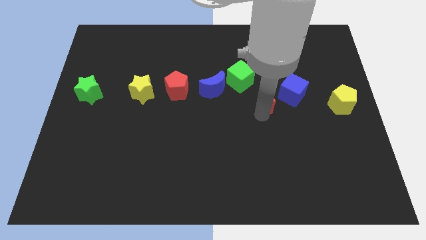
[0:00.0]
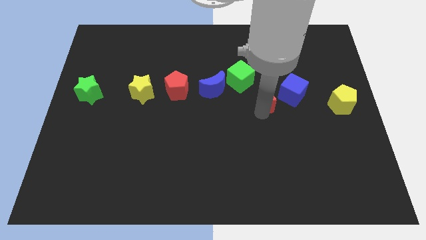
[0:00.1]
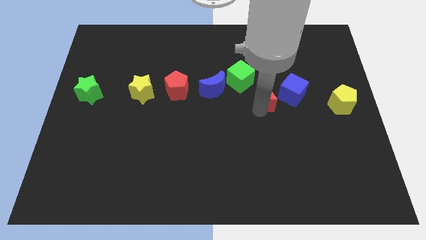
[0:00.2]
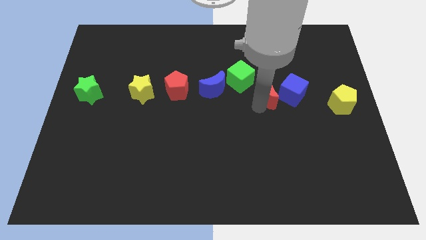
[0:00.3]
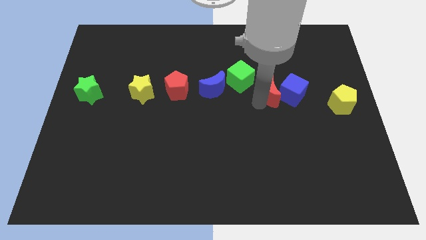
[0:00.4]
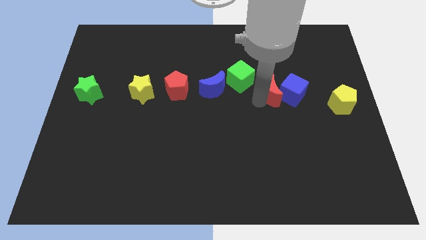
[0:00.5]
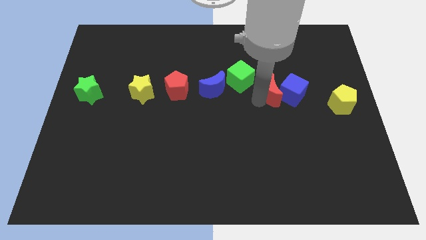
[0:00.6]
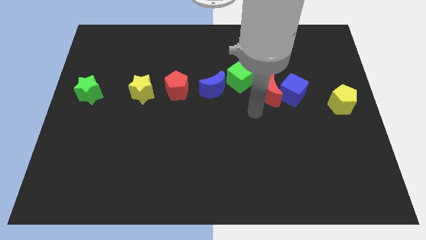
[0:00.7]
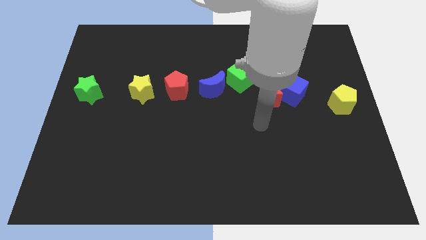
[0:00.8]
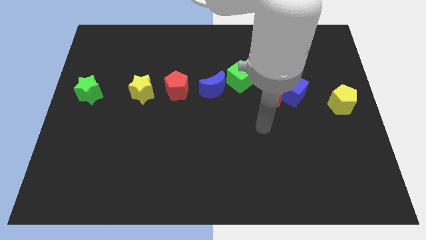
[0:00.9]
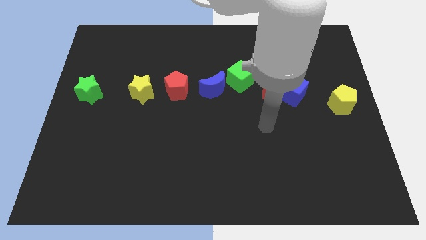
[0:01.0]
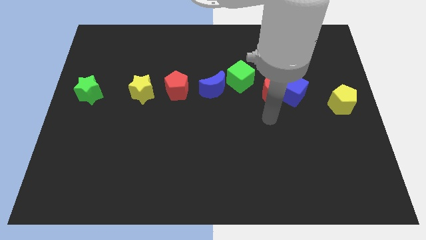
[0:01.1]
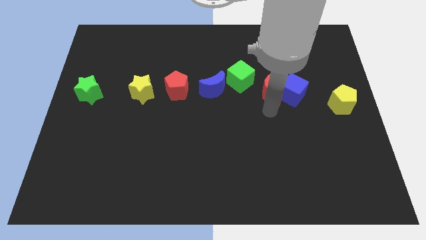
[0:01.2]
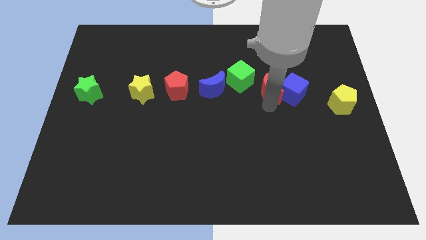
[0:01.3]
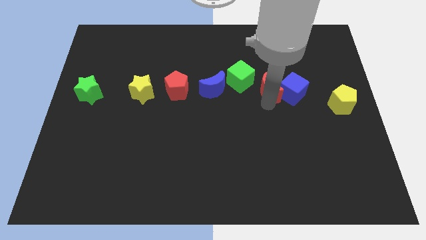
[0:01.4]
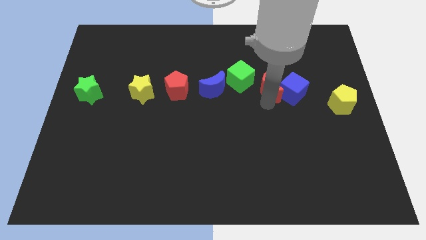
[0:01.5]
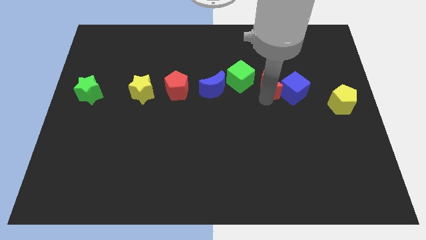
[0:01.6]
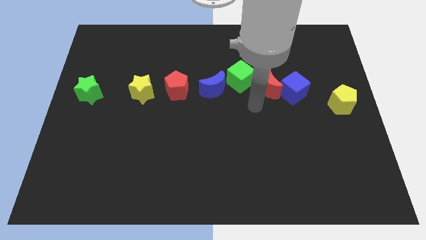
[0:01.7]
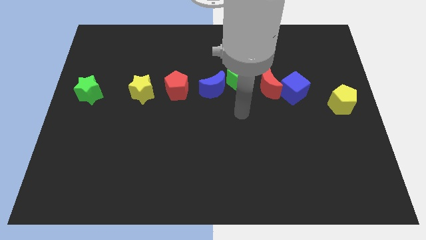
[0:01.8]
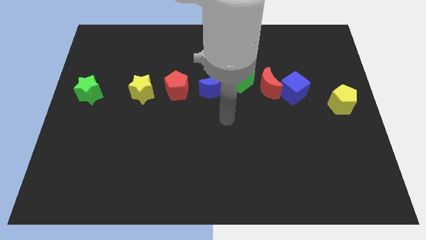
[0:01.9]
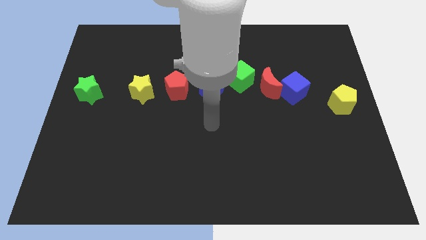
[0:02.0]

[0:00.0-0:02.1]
push the red crescent to the left of the blue cube

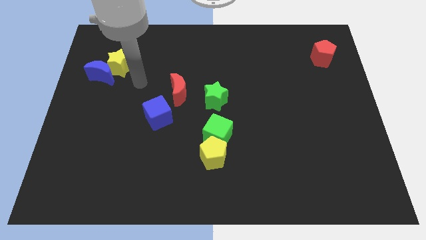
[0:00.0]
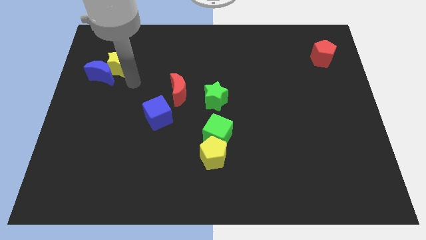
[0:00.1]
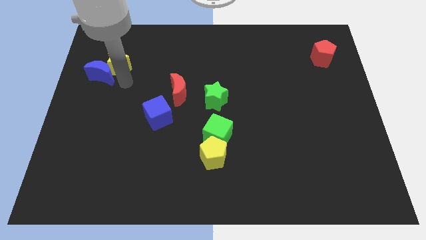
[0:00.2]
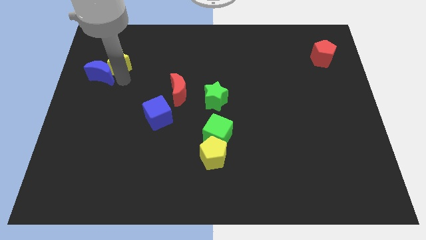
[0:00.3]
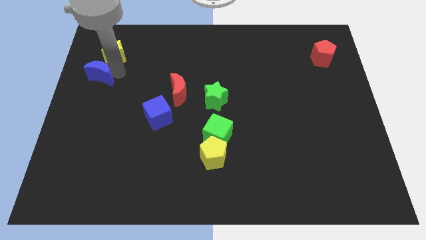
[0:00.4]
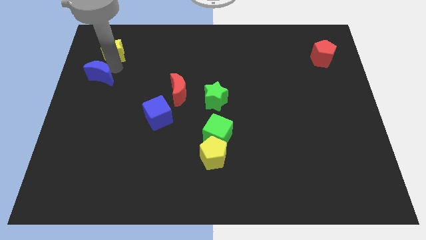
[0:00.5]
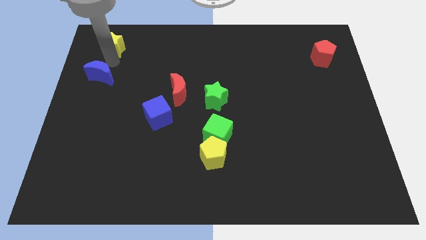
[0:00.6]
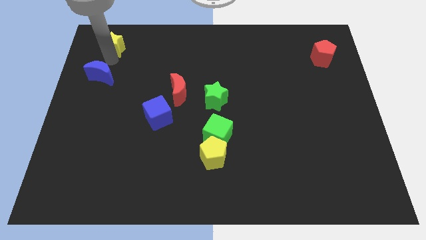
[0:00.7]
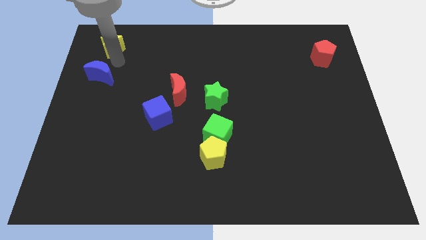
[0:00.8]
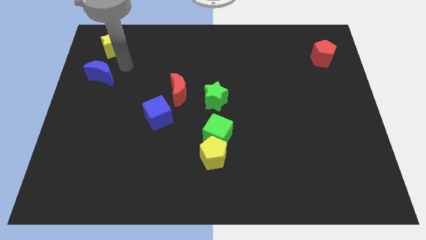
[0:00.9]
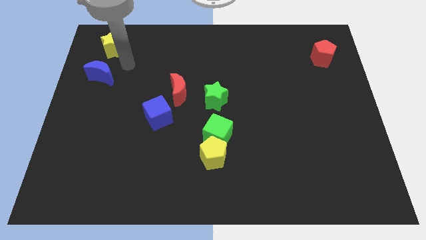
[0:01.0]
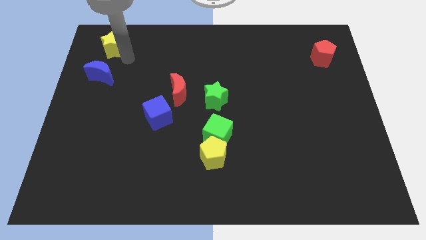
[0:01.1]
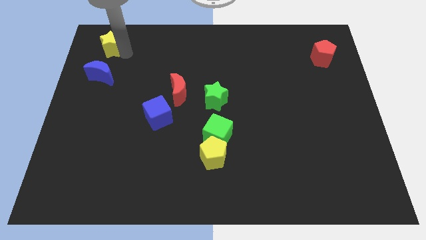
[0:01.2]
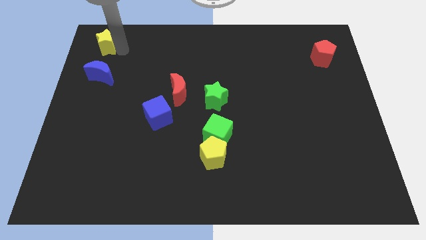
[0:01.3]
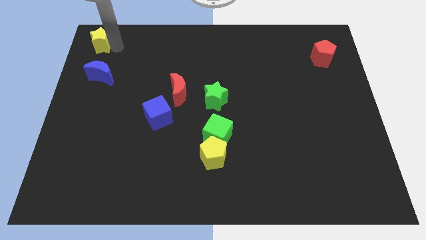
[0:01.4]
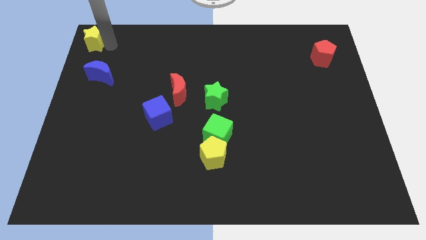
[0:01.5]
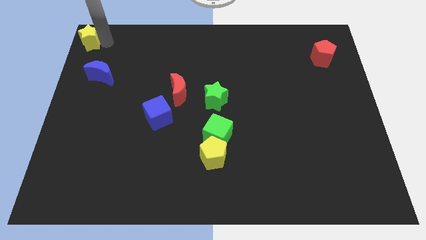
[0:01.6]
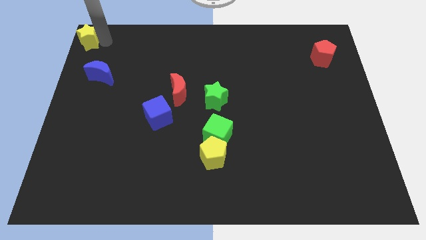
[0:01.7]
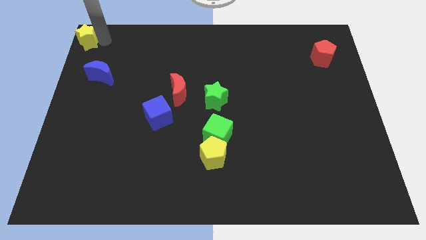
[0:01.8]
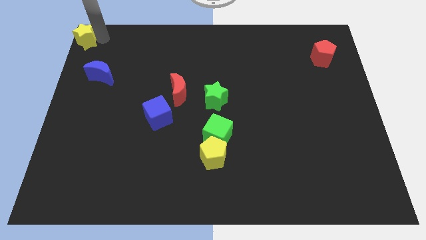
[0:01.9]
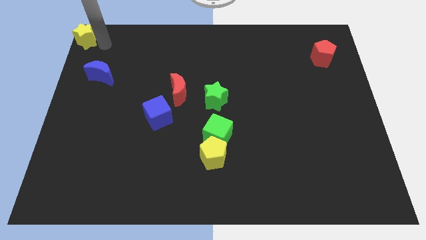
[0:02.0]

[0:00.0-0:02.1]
place the yellow star at the top left side

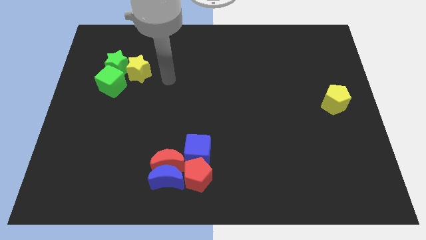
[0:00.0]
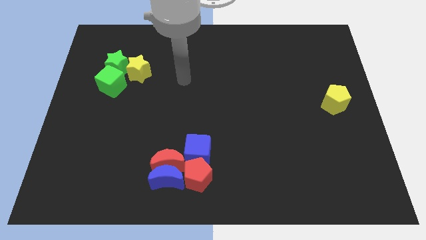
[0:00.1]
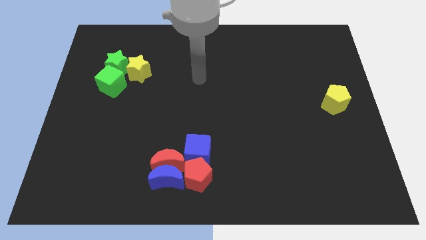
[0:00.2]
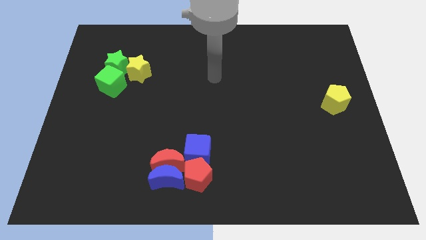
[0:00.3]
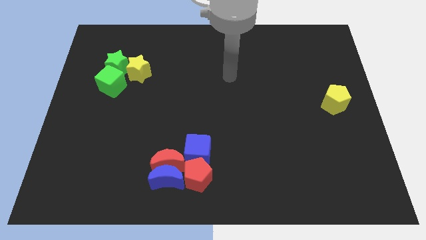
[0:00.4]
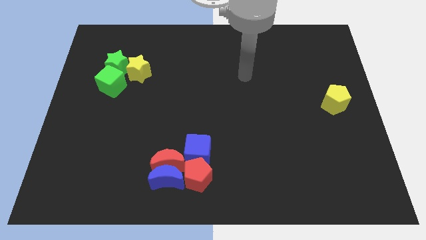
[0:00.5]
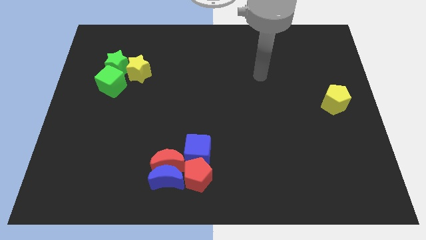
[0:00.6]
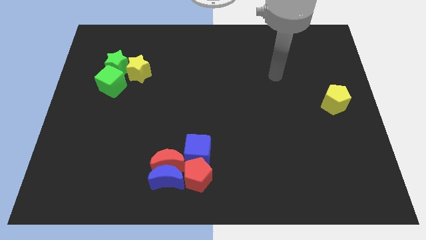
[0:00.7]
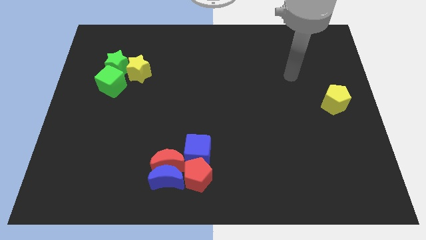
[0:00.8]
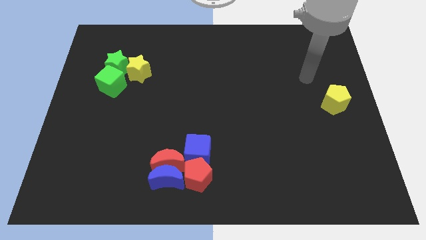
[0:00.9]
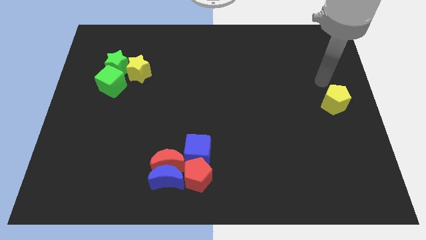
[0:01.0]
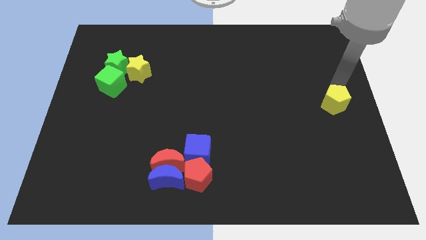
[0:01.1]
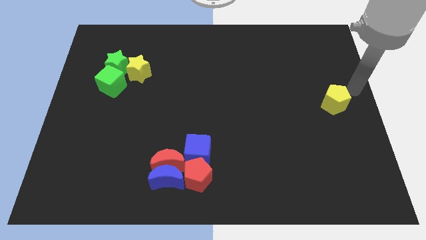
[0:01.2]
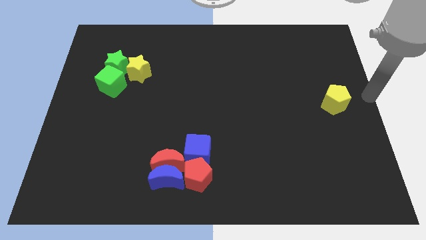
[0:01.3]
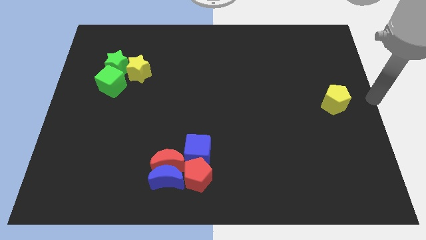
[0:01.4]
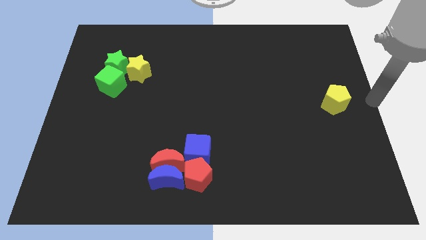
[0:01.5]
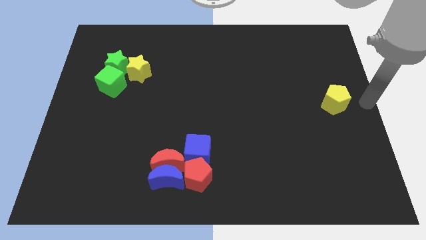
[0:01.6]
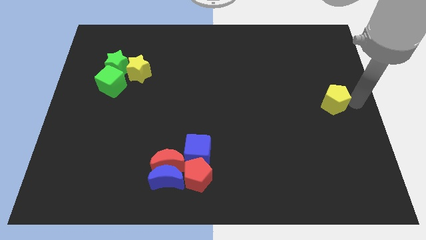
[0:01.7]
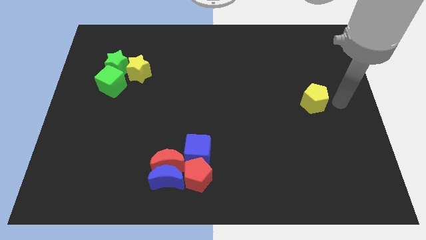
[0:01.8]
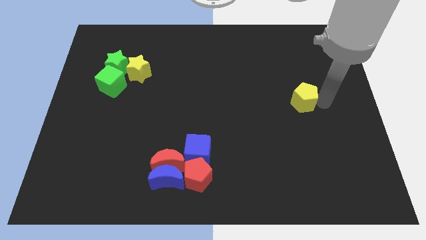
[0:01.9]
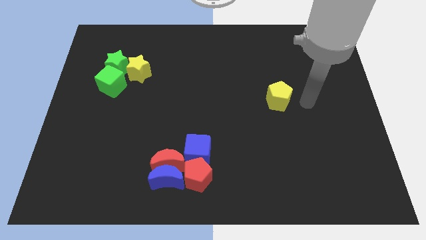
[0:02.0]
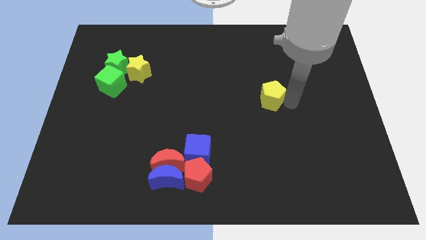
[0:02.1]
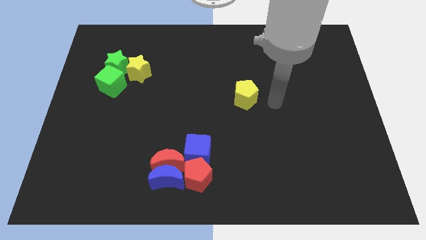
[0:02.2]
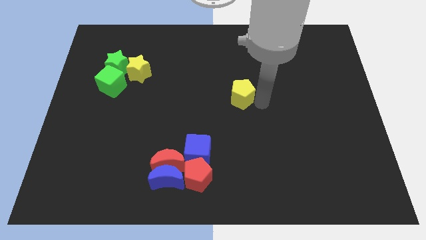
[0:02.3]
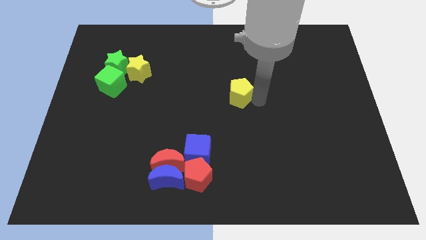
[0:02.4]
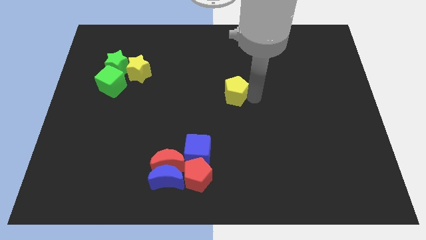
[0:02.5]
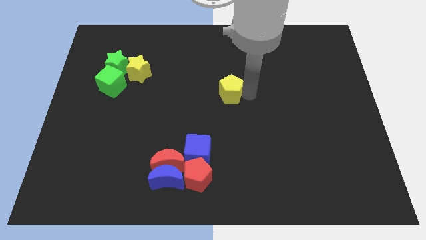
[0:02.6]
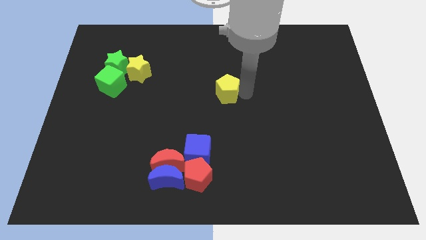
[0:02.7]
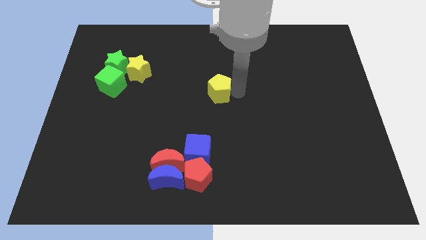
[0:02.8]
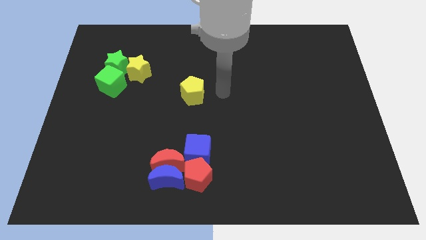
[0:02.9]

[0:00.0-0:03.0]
place the yellow pentagon bottom right to the yellow star

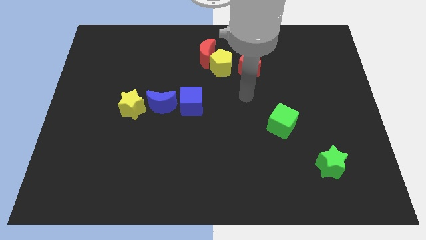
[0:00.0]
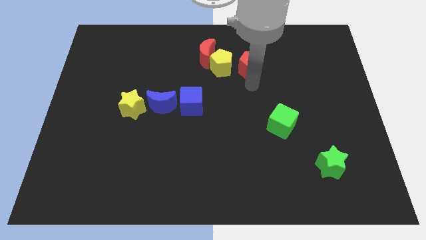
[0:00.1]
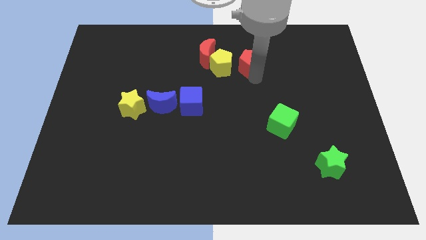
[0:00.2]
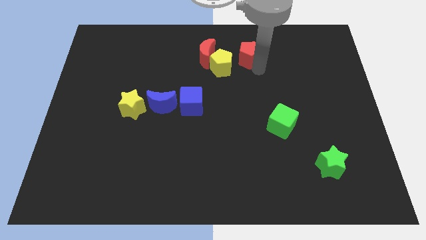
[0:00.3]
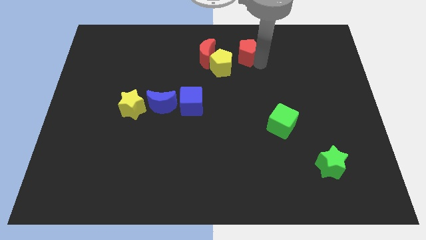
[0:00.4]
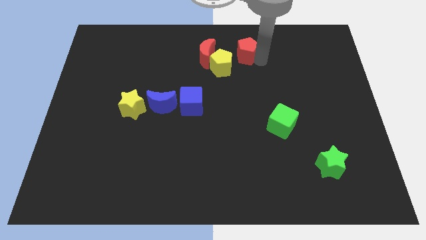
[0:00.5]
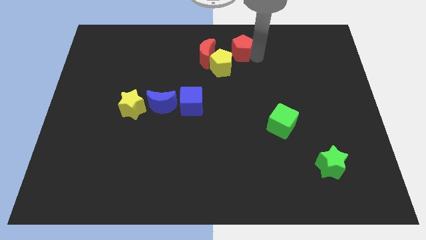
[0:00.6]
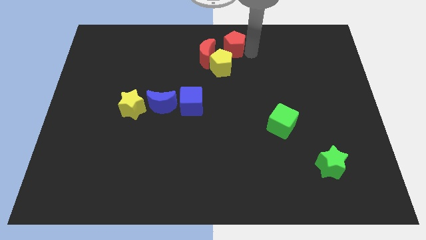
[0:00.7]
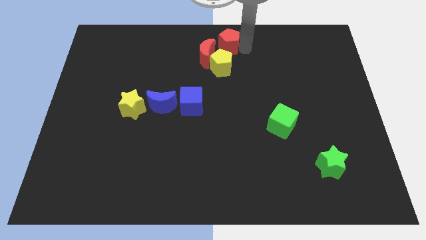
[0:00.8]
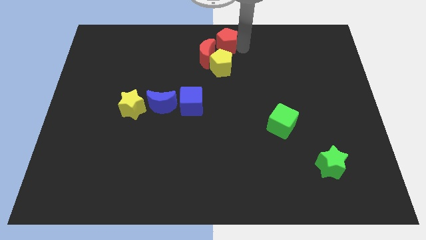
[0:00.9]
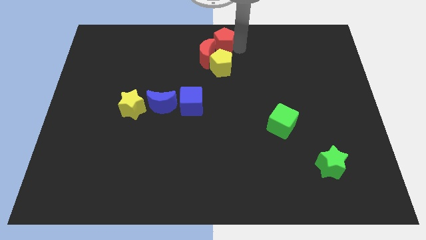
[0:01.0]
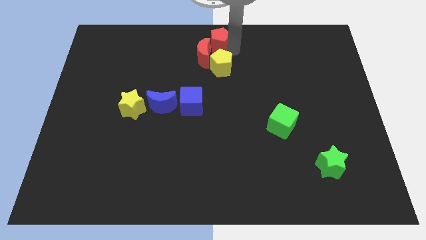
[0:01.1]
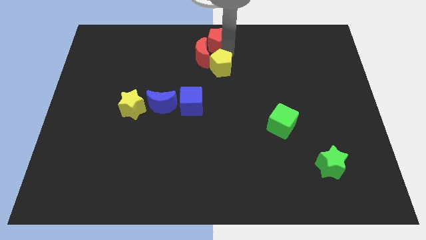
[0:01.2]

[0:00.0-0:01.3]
push the red pentagon into the red crescent

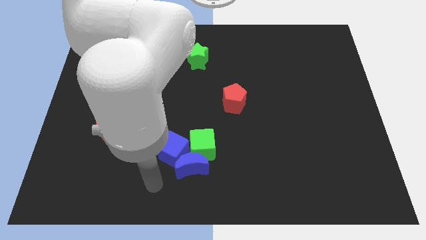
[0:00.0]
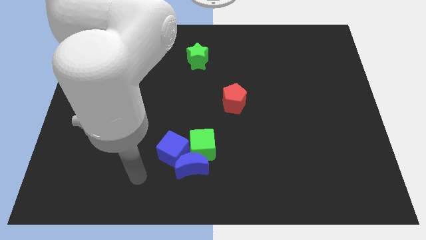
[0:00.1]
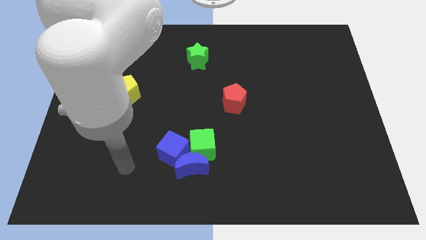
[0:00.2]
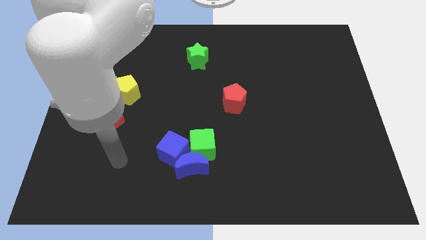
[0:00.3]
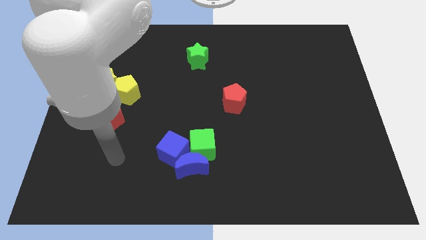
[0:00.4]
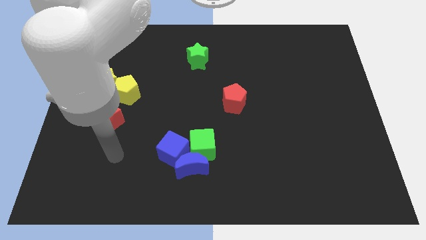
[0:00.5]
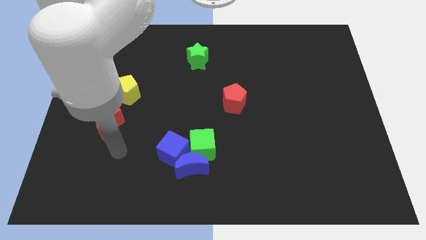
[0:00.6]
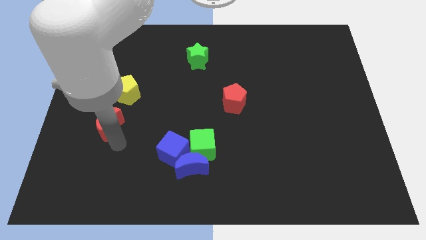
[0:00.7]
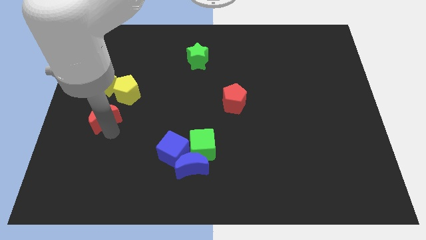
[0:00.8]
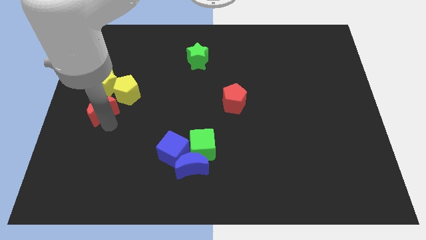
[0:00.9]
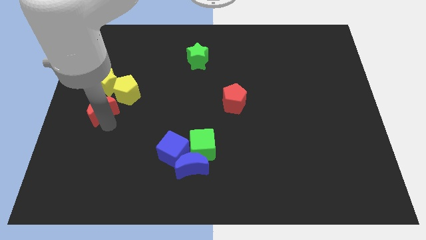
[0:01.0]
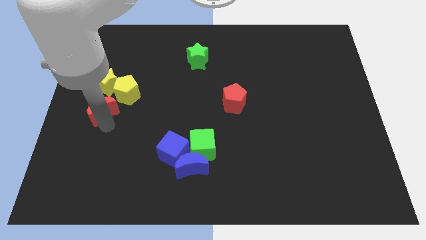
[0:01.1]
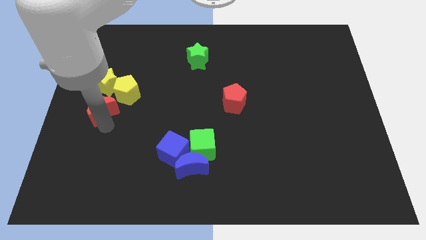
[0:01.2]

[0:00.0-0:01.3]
push the arm towards the red crescent
